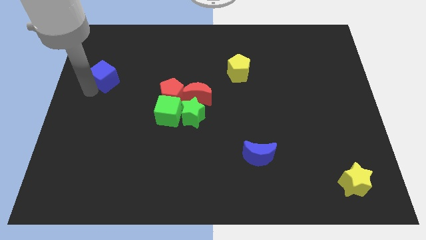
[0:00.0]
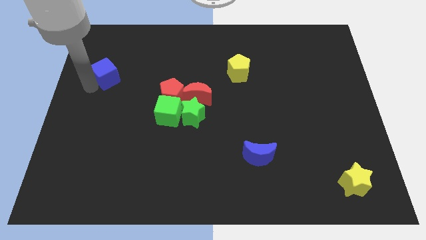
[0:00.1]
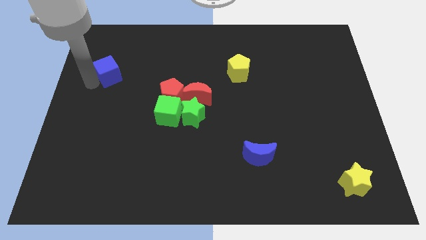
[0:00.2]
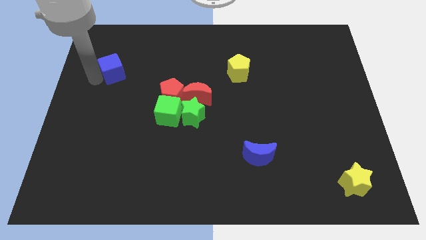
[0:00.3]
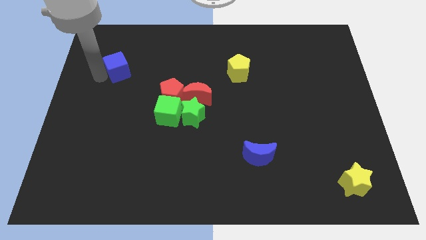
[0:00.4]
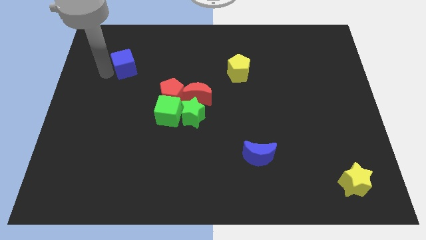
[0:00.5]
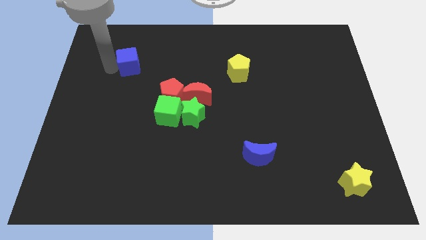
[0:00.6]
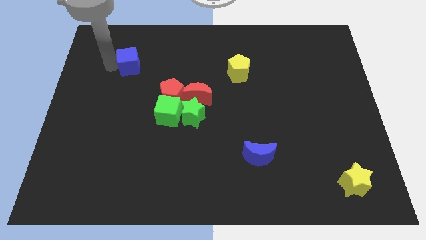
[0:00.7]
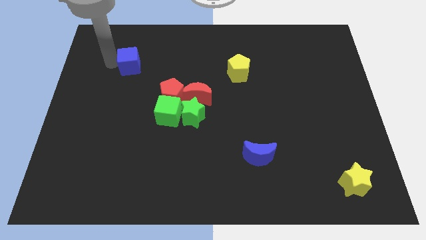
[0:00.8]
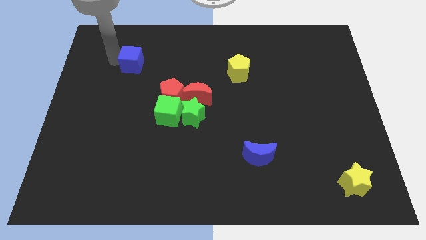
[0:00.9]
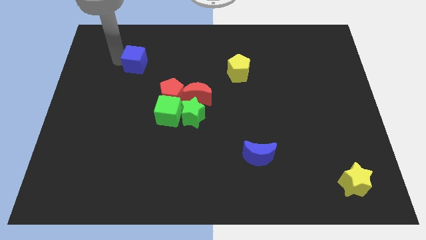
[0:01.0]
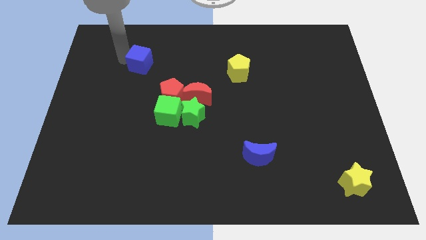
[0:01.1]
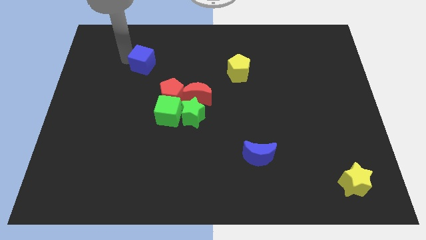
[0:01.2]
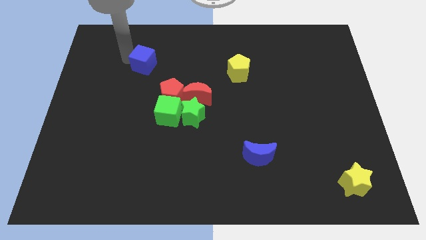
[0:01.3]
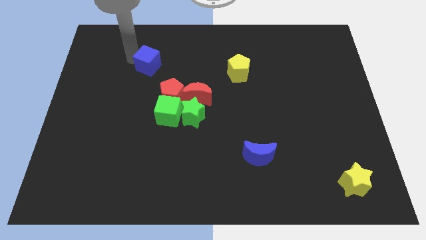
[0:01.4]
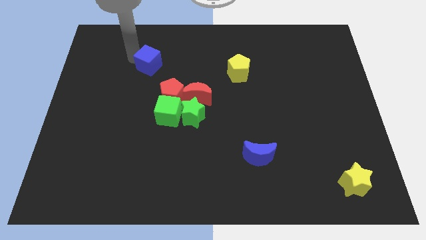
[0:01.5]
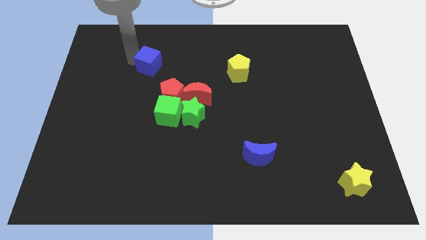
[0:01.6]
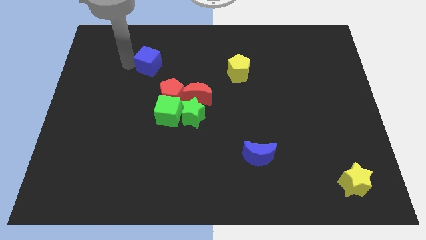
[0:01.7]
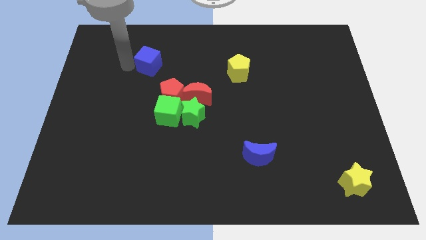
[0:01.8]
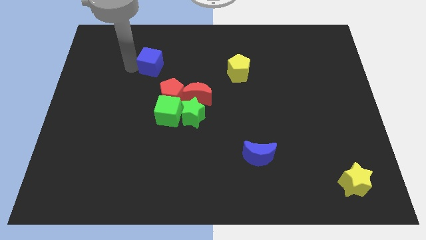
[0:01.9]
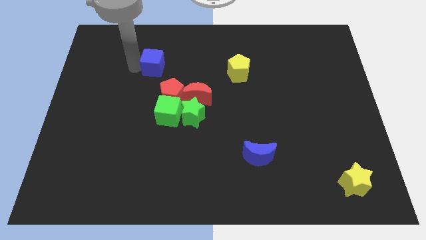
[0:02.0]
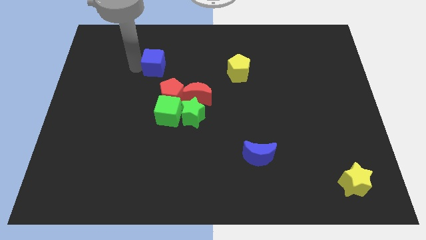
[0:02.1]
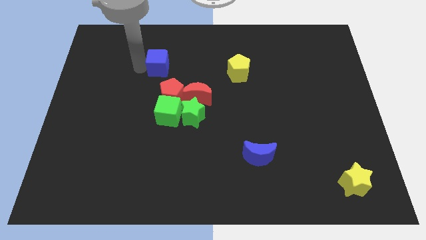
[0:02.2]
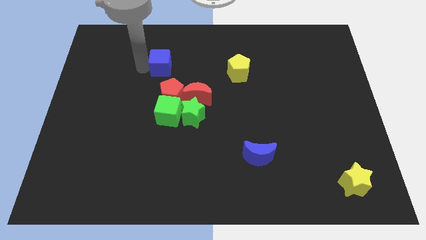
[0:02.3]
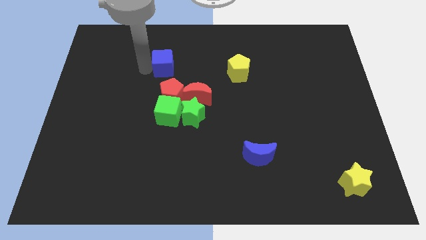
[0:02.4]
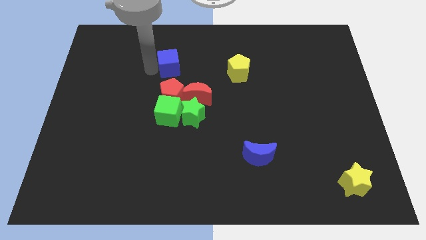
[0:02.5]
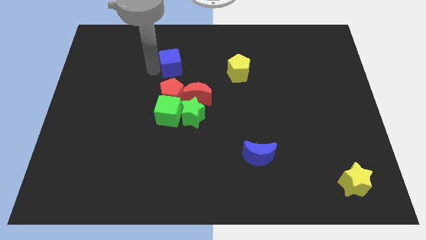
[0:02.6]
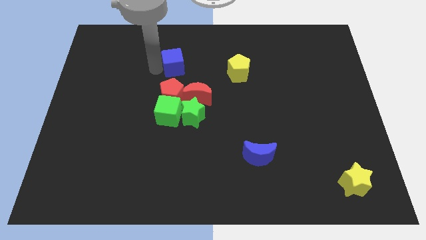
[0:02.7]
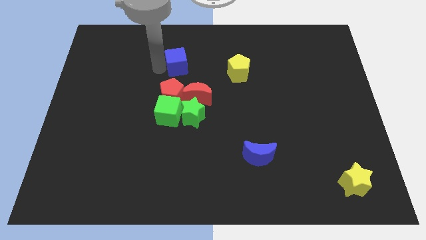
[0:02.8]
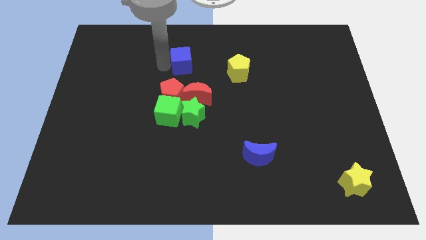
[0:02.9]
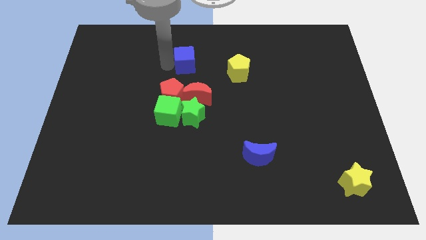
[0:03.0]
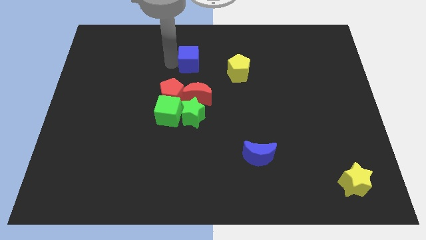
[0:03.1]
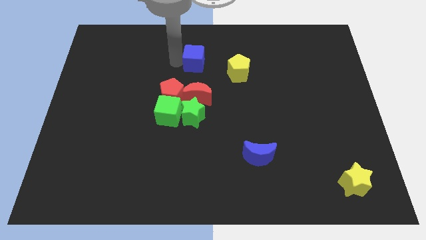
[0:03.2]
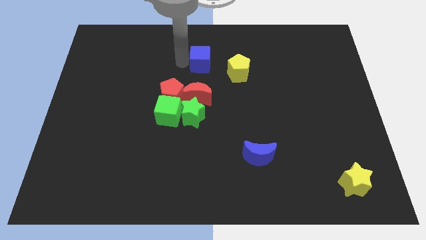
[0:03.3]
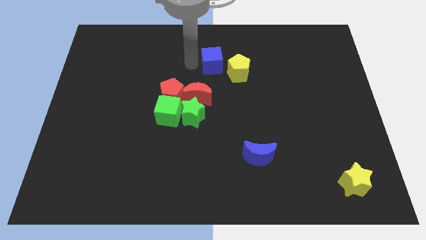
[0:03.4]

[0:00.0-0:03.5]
push the blue cube to the top center

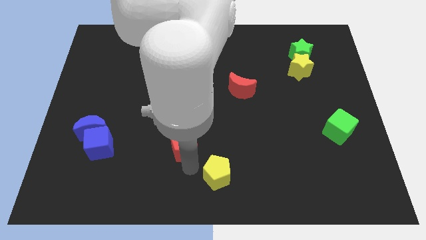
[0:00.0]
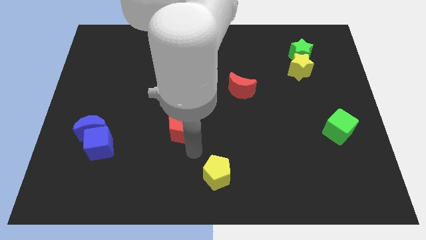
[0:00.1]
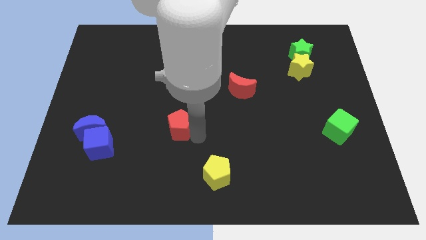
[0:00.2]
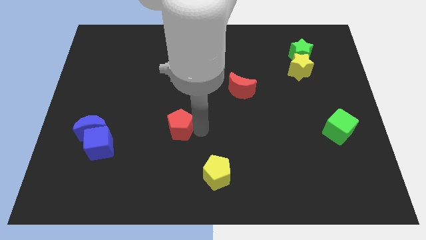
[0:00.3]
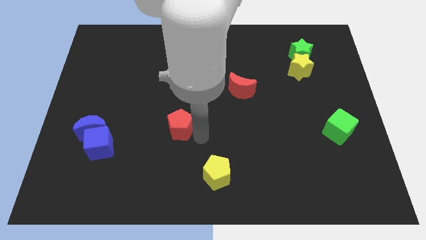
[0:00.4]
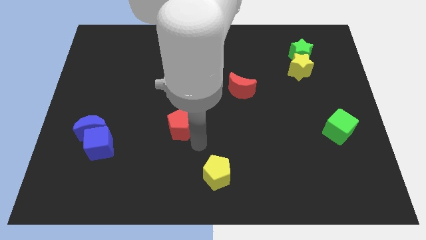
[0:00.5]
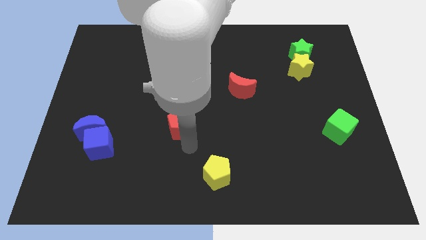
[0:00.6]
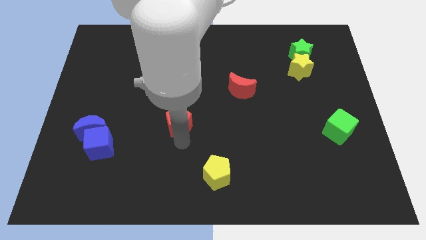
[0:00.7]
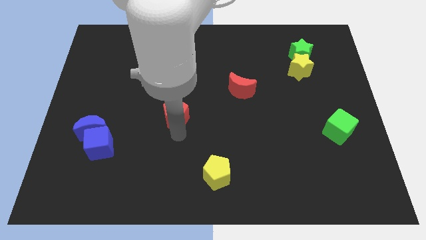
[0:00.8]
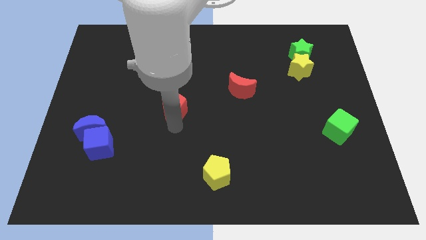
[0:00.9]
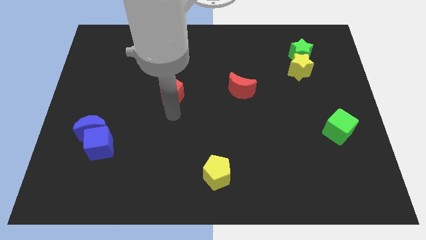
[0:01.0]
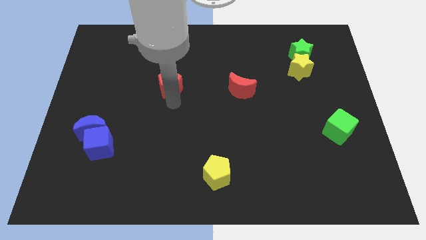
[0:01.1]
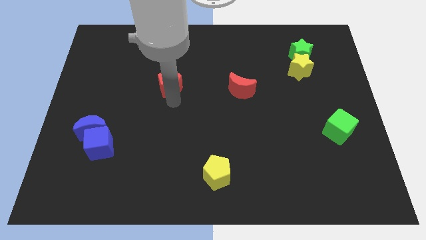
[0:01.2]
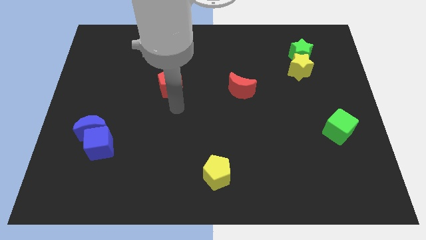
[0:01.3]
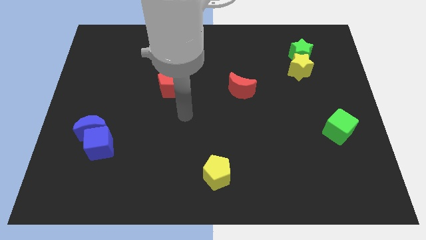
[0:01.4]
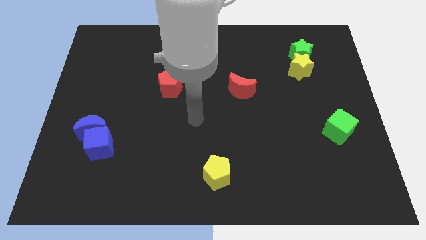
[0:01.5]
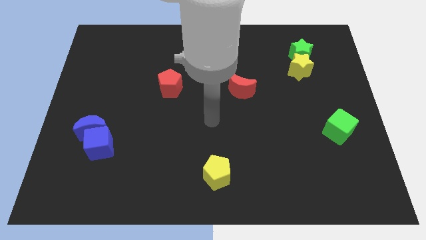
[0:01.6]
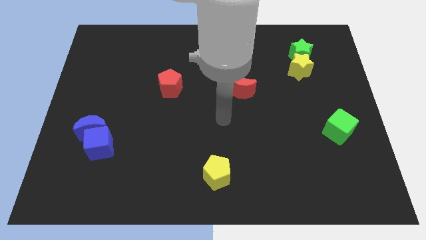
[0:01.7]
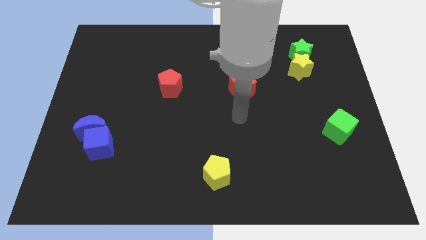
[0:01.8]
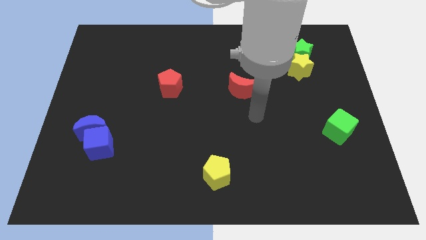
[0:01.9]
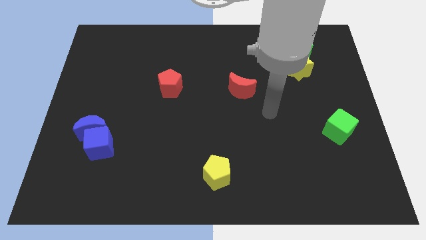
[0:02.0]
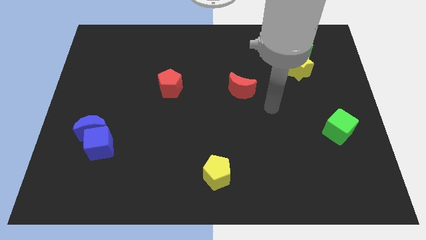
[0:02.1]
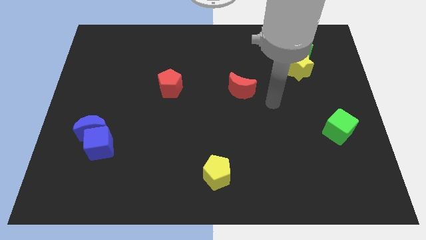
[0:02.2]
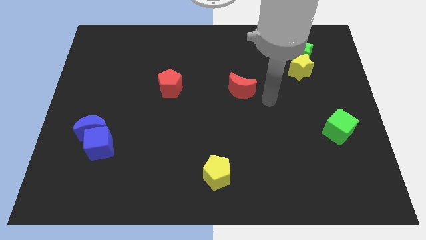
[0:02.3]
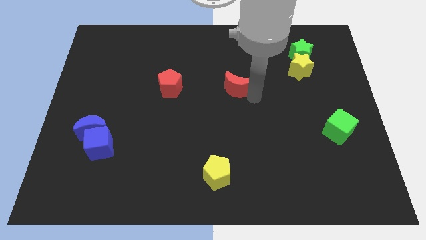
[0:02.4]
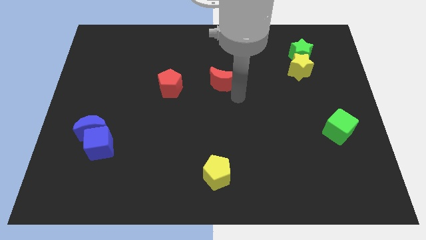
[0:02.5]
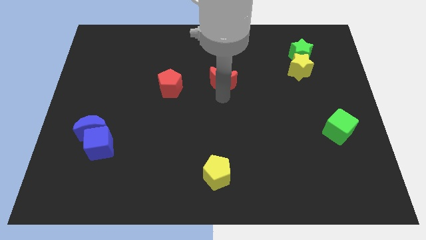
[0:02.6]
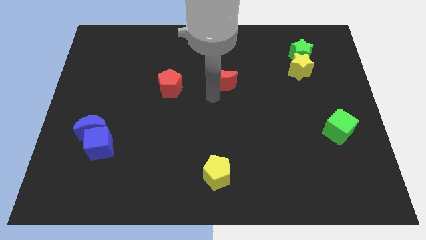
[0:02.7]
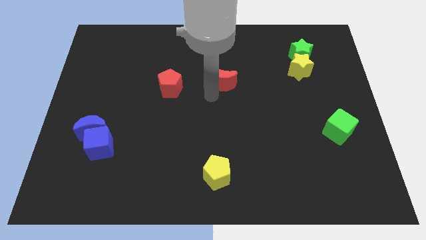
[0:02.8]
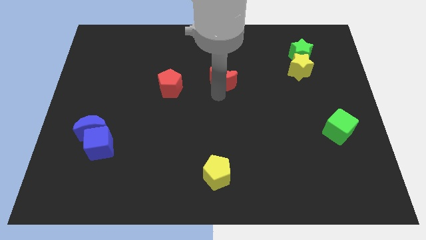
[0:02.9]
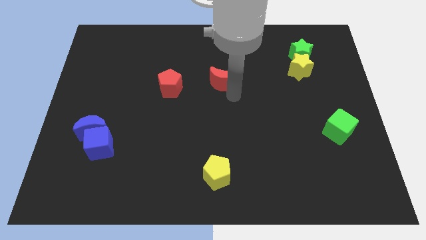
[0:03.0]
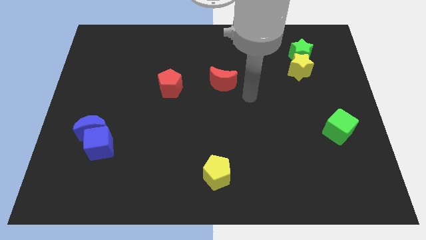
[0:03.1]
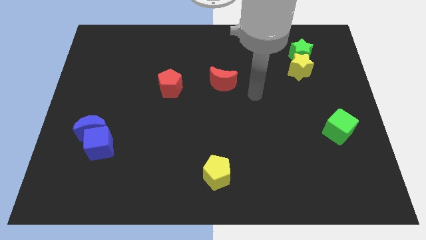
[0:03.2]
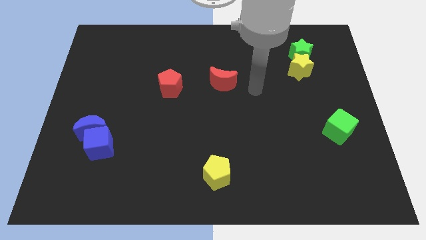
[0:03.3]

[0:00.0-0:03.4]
move red moon above the yellow pentagon

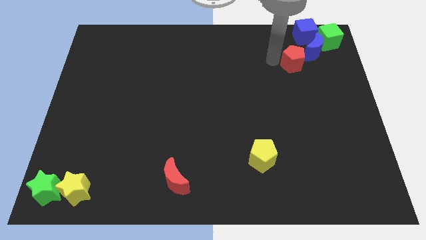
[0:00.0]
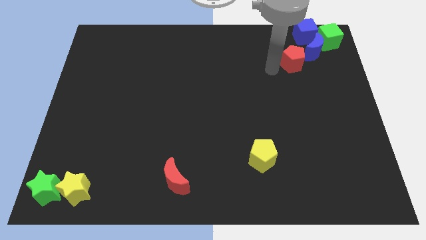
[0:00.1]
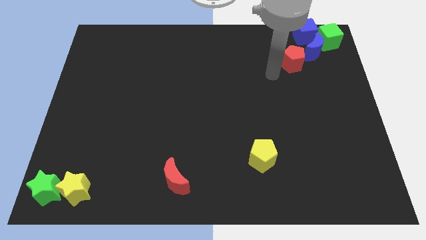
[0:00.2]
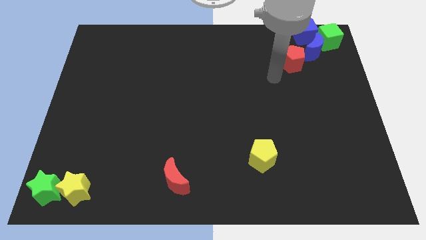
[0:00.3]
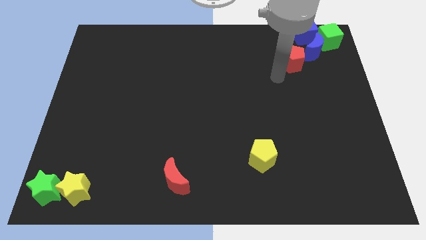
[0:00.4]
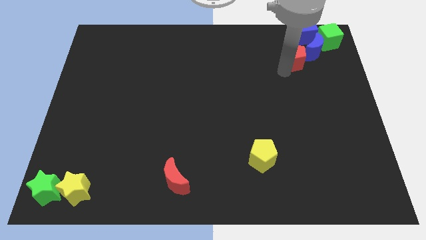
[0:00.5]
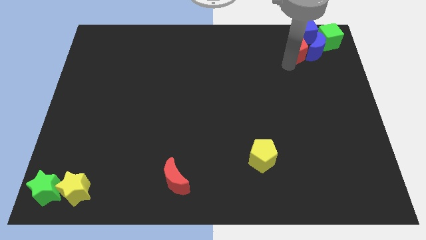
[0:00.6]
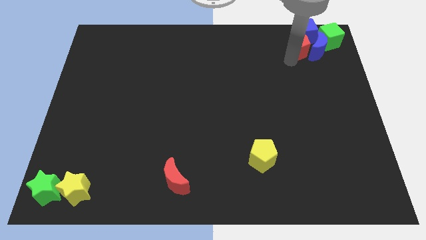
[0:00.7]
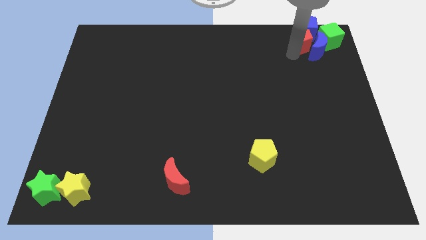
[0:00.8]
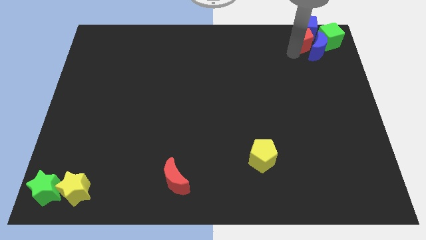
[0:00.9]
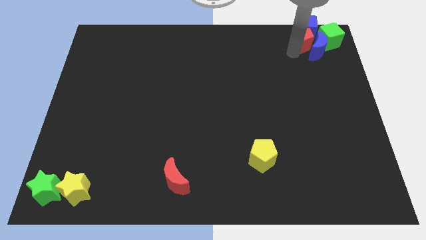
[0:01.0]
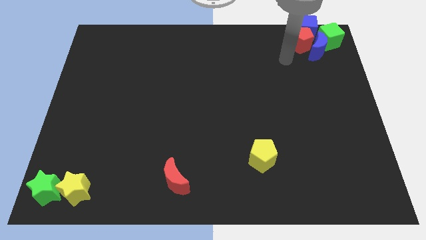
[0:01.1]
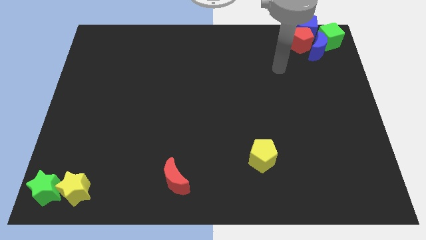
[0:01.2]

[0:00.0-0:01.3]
move the red pentagon into the blue cube

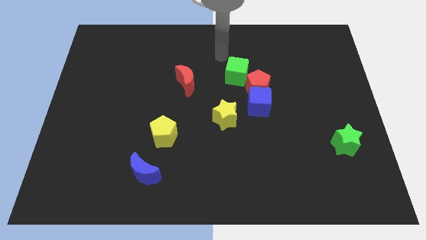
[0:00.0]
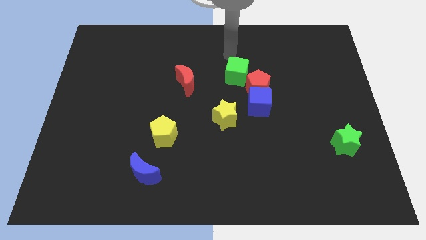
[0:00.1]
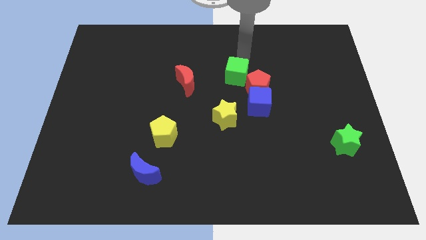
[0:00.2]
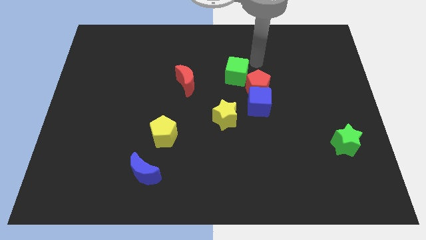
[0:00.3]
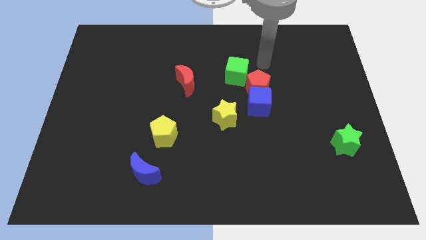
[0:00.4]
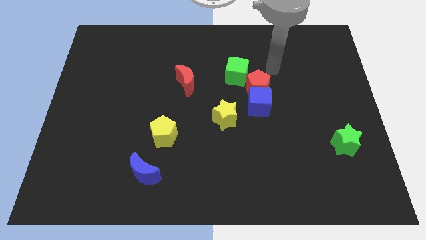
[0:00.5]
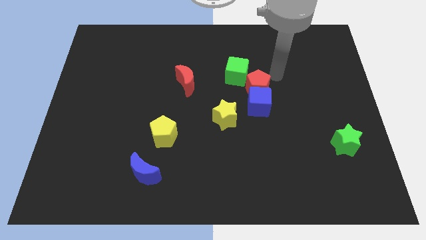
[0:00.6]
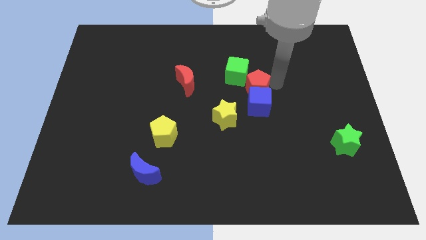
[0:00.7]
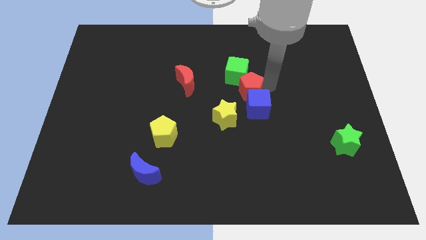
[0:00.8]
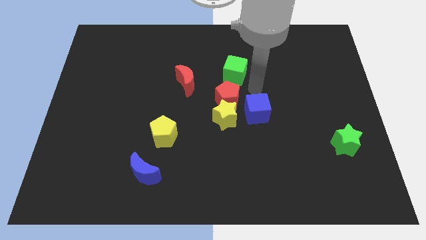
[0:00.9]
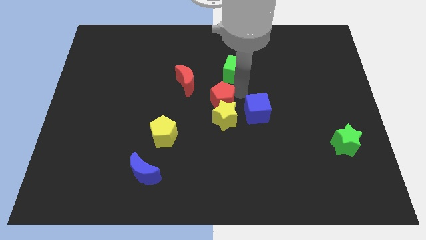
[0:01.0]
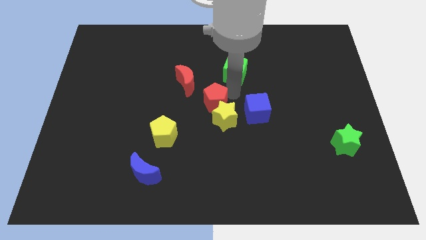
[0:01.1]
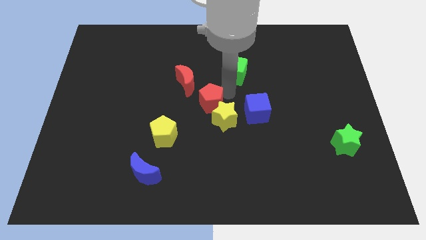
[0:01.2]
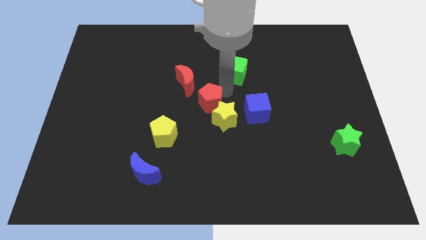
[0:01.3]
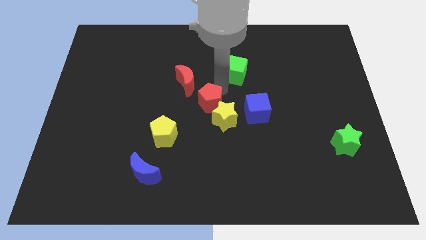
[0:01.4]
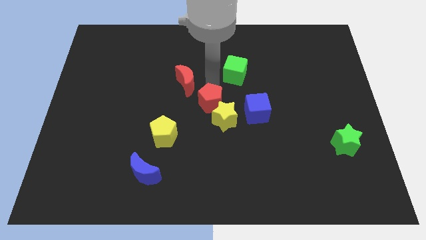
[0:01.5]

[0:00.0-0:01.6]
adjust the red pentagon in between the red moon and the yellow star
